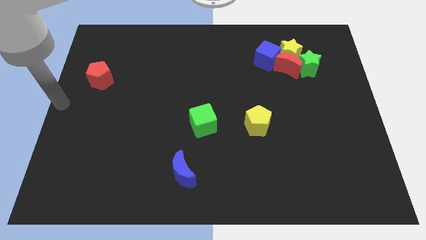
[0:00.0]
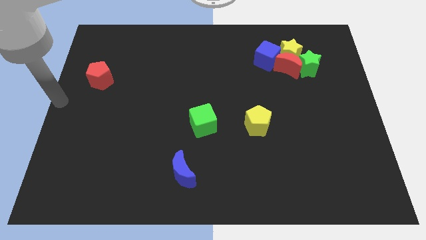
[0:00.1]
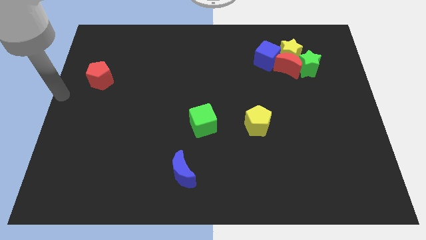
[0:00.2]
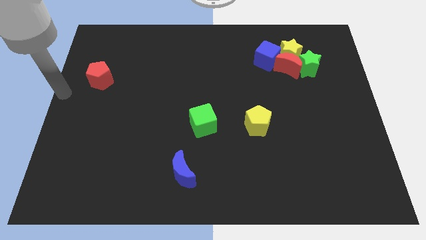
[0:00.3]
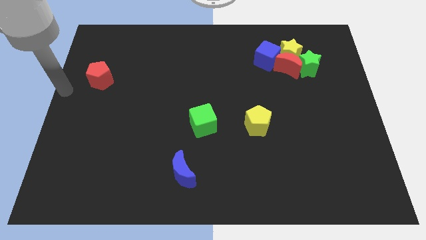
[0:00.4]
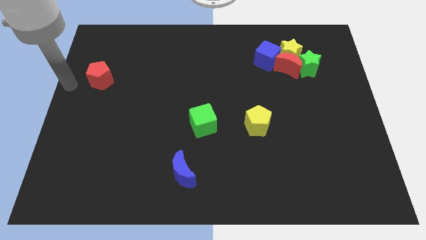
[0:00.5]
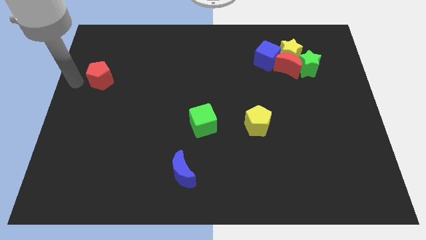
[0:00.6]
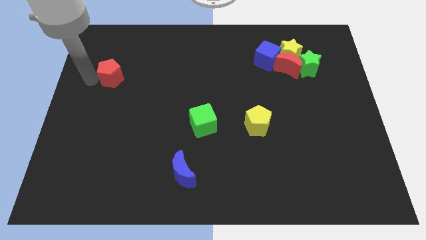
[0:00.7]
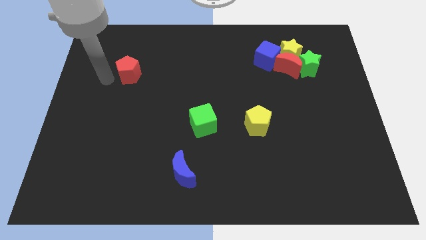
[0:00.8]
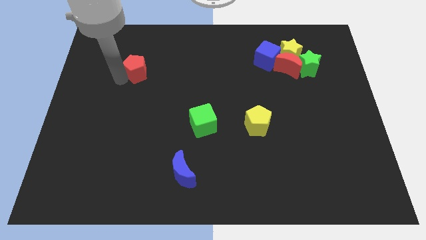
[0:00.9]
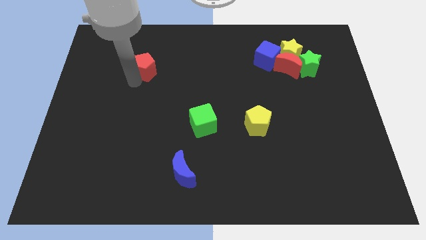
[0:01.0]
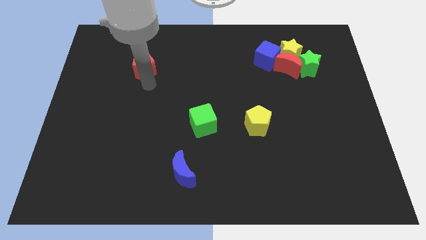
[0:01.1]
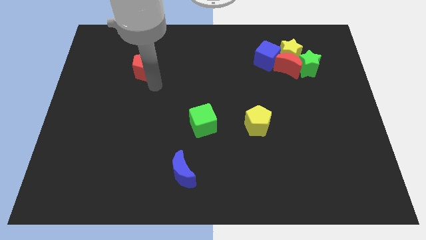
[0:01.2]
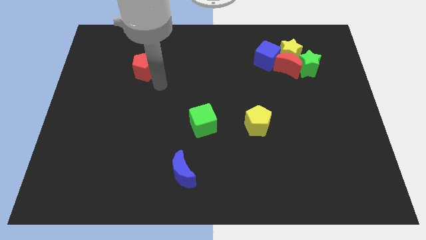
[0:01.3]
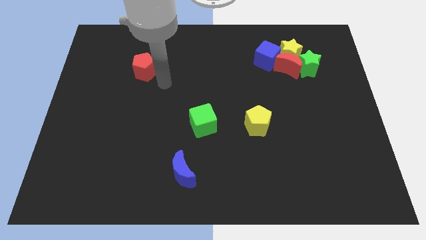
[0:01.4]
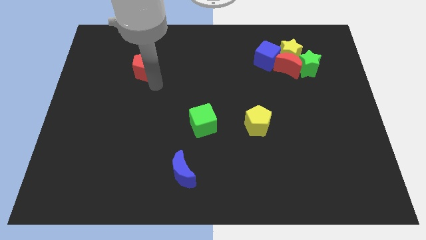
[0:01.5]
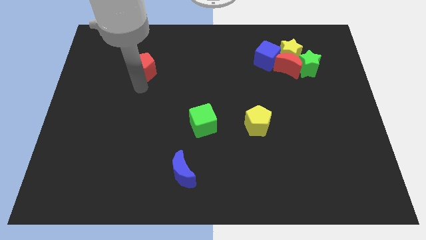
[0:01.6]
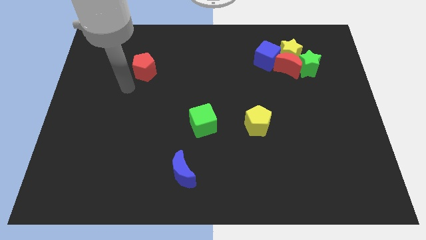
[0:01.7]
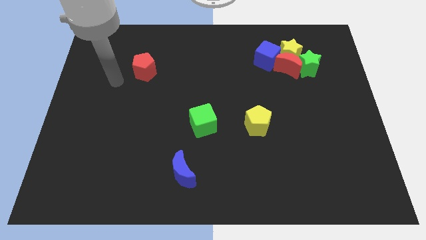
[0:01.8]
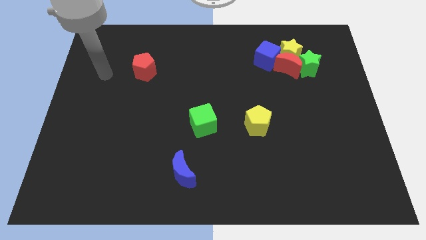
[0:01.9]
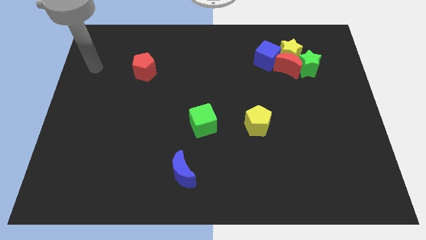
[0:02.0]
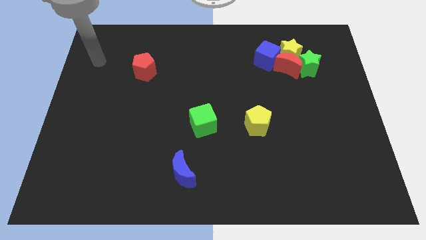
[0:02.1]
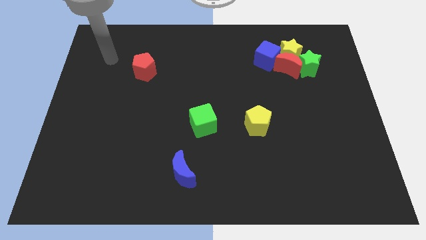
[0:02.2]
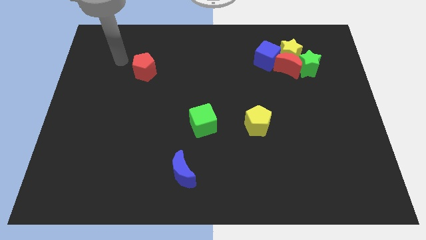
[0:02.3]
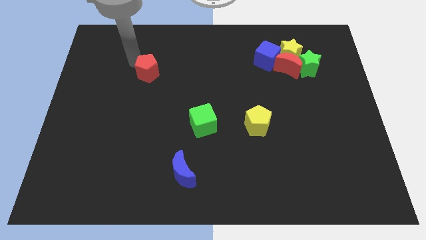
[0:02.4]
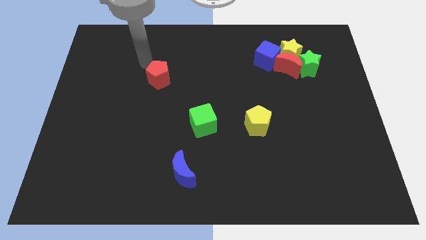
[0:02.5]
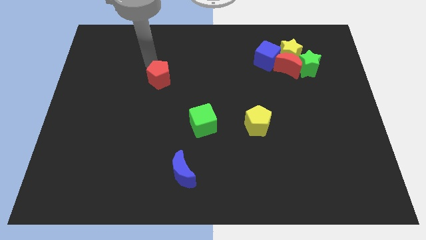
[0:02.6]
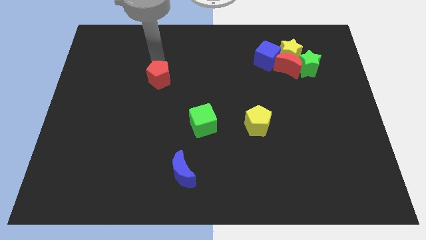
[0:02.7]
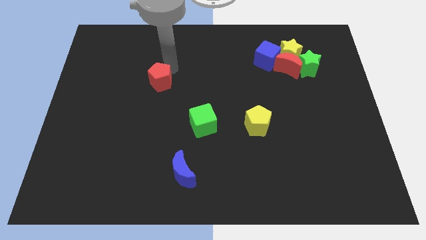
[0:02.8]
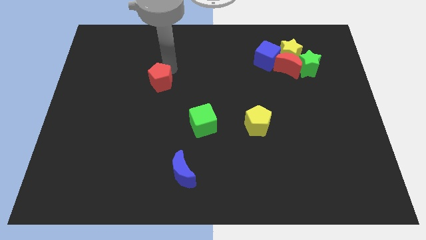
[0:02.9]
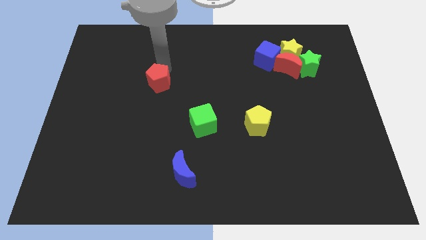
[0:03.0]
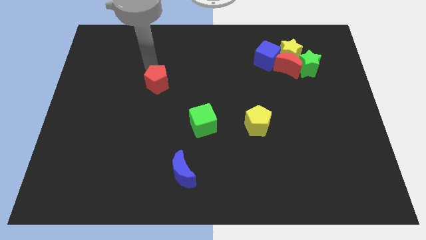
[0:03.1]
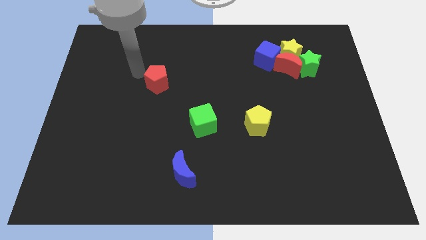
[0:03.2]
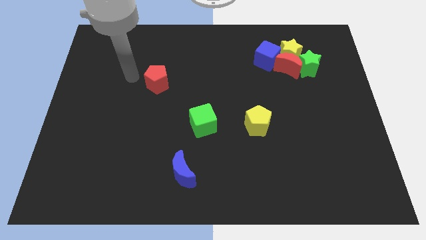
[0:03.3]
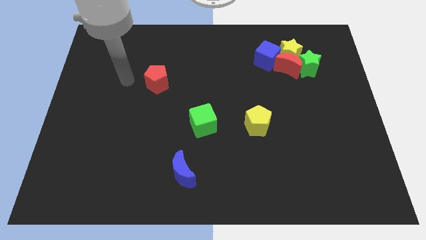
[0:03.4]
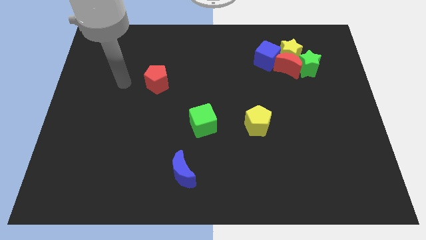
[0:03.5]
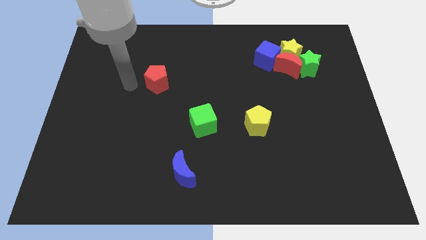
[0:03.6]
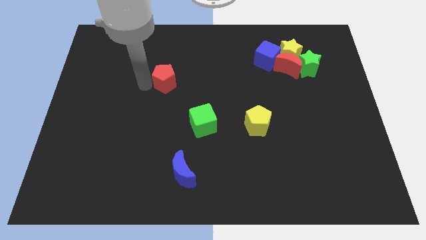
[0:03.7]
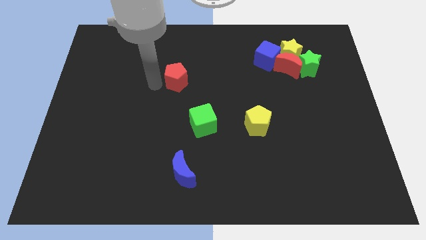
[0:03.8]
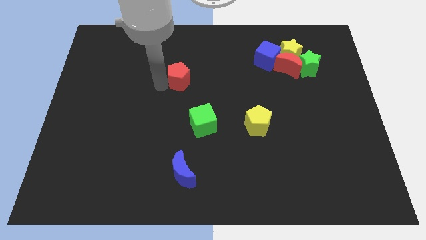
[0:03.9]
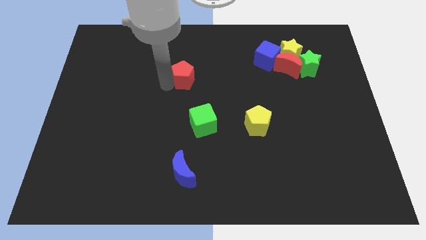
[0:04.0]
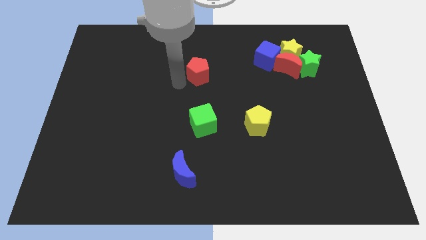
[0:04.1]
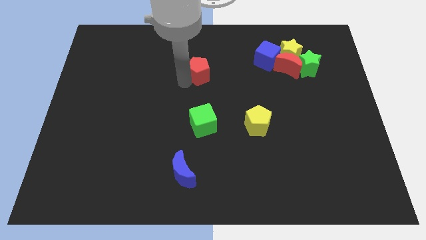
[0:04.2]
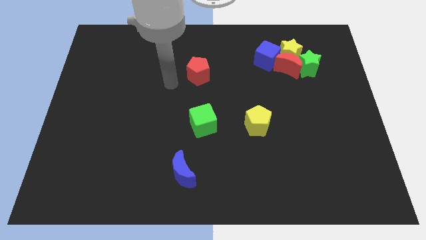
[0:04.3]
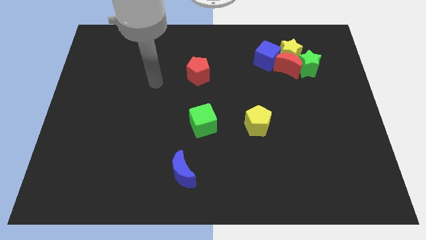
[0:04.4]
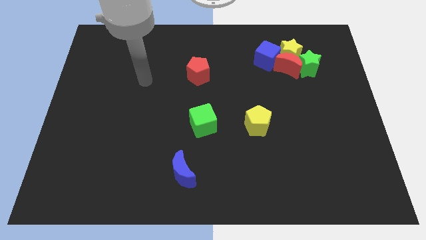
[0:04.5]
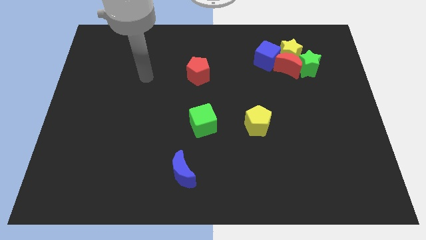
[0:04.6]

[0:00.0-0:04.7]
place the red pentagon left to the group of blocks

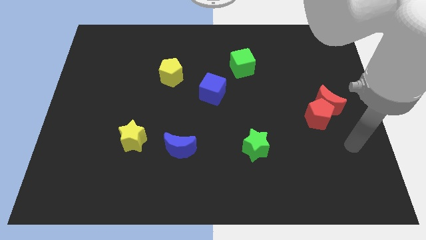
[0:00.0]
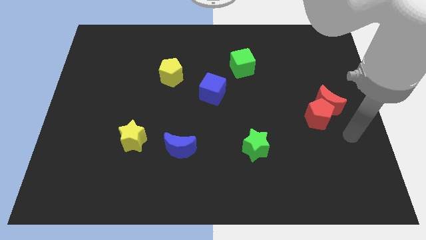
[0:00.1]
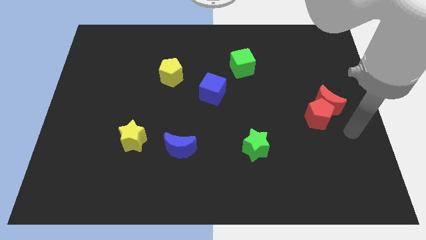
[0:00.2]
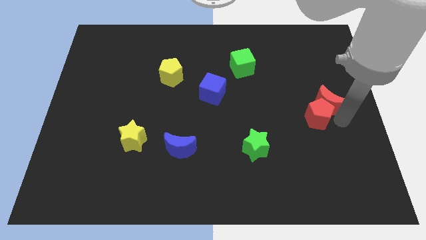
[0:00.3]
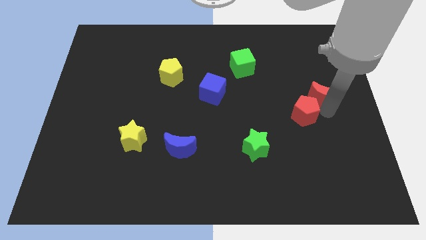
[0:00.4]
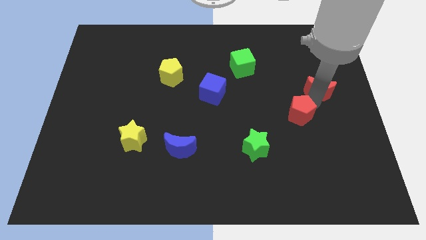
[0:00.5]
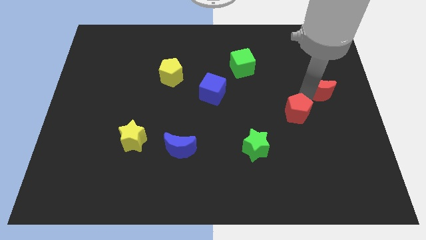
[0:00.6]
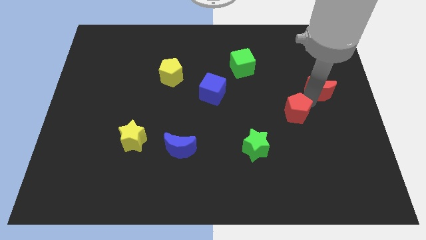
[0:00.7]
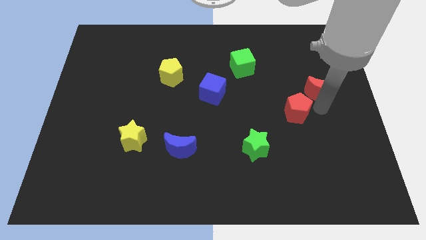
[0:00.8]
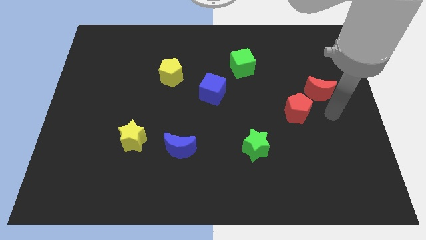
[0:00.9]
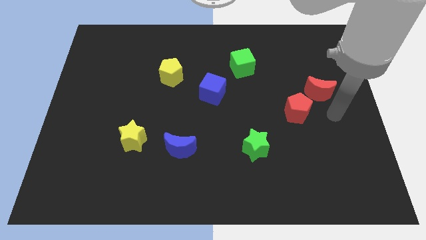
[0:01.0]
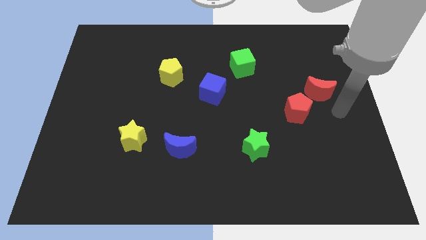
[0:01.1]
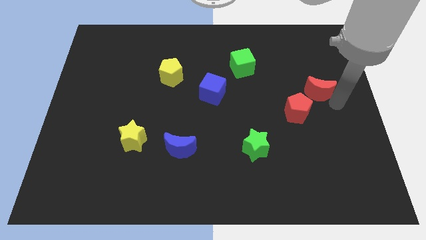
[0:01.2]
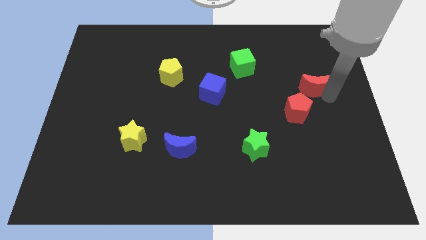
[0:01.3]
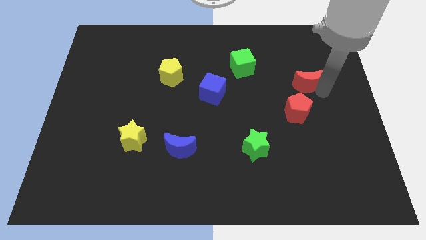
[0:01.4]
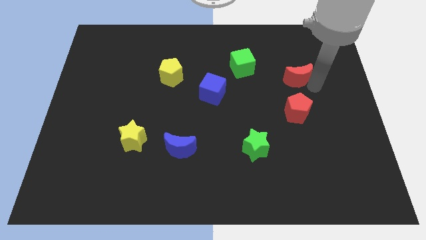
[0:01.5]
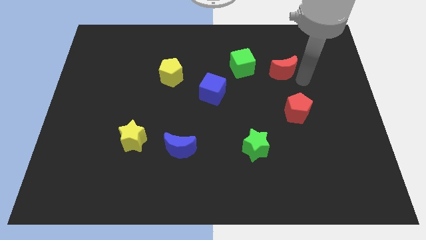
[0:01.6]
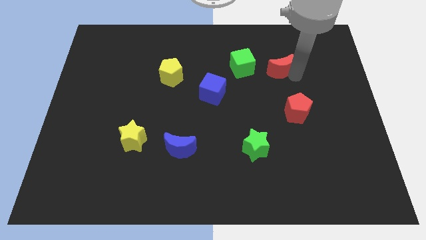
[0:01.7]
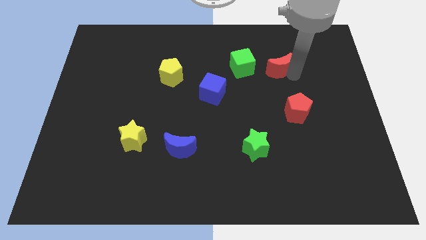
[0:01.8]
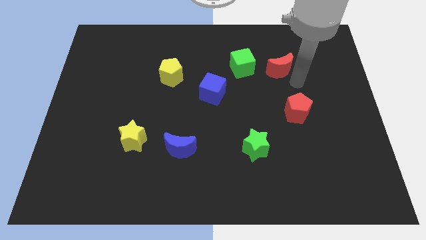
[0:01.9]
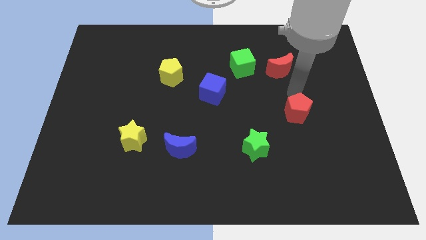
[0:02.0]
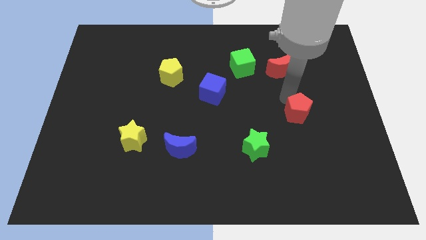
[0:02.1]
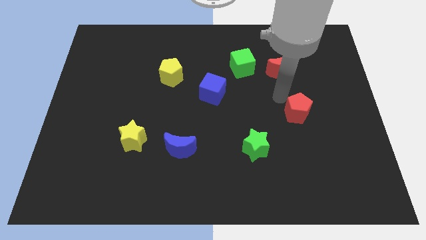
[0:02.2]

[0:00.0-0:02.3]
separate red moon from red pentagon

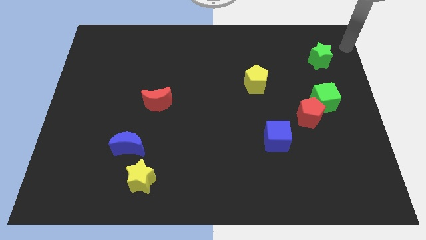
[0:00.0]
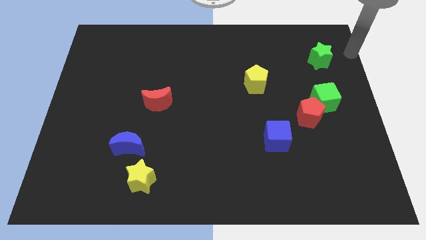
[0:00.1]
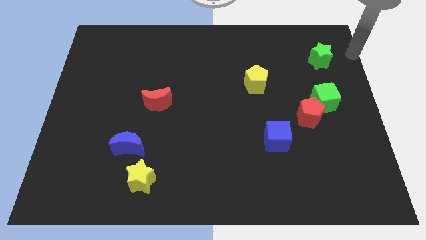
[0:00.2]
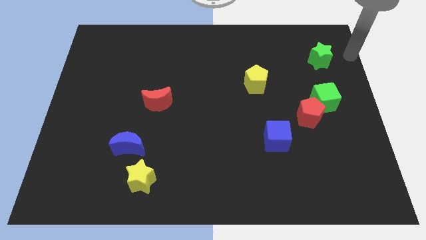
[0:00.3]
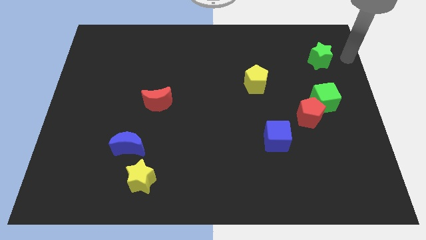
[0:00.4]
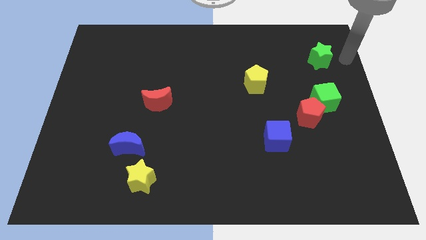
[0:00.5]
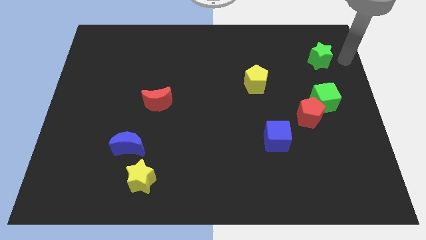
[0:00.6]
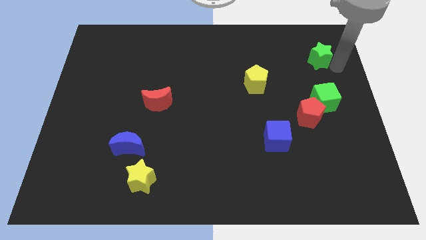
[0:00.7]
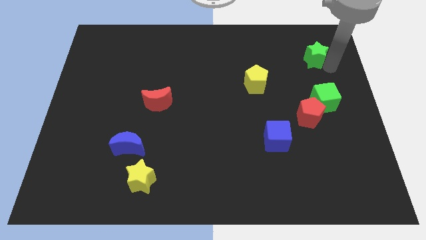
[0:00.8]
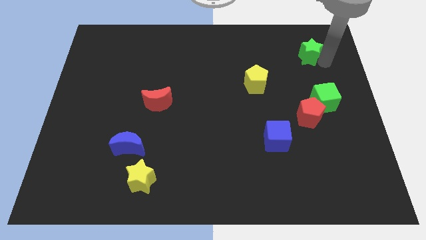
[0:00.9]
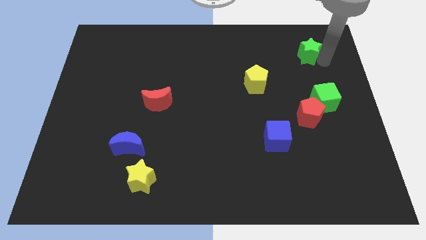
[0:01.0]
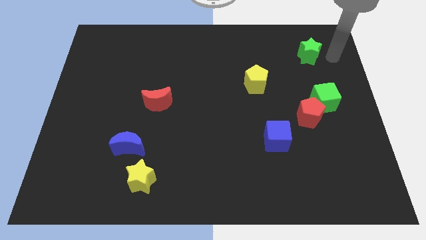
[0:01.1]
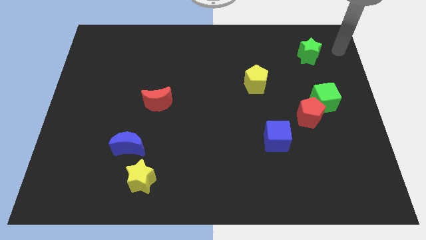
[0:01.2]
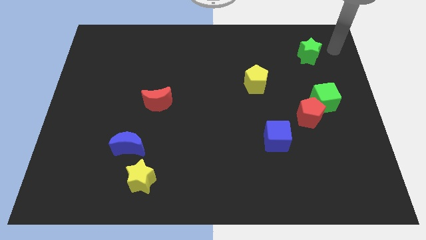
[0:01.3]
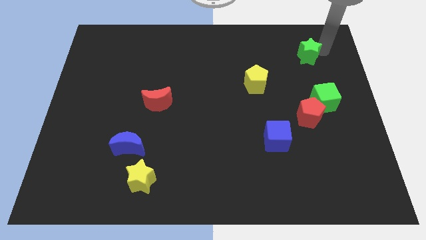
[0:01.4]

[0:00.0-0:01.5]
move the green star vertically above to the green cube

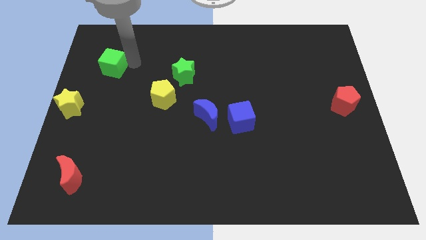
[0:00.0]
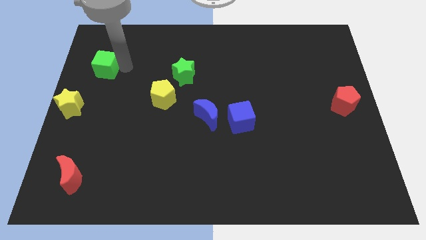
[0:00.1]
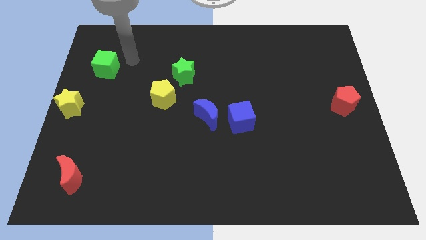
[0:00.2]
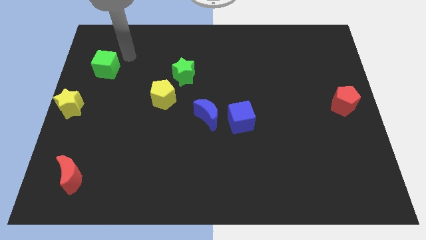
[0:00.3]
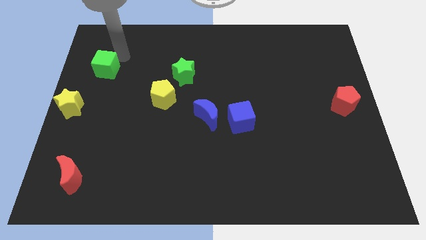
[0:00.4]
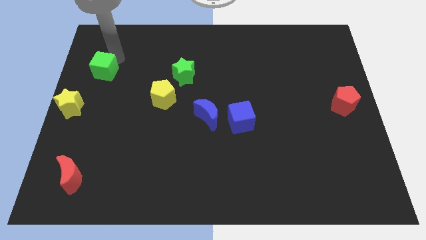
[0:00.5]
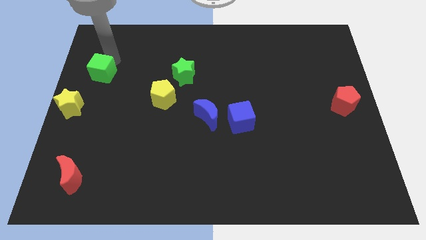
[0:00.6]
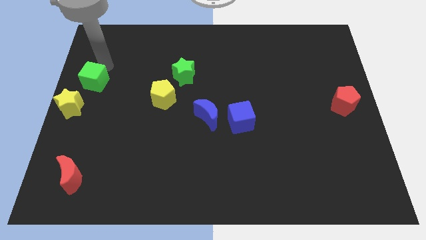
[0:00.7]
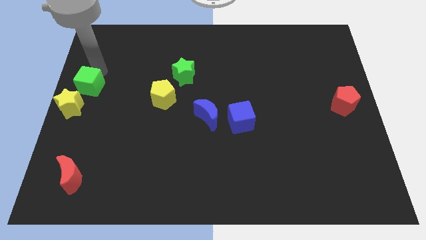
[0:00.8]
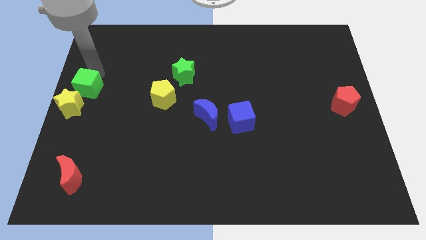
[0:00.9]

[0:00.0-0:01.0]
move green cube towards yellow star
